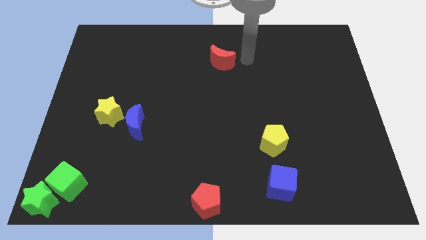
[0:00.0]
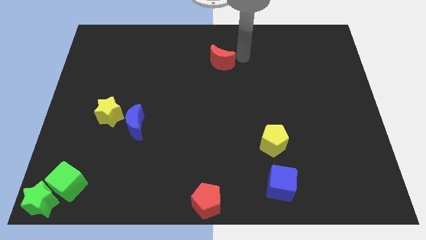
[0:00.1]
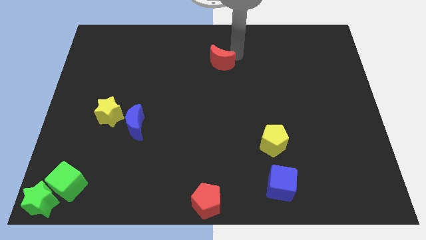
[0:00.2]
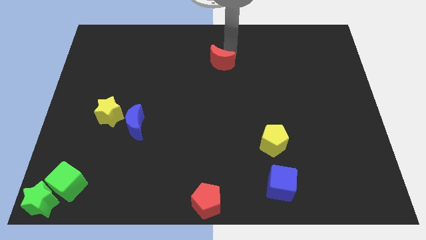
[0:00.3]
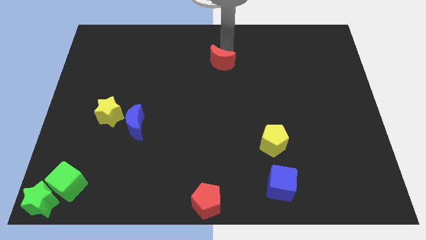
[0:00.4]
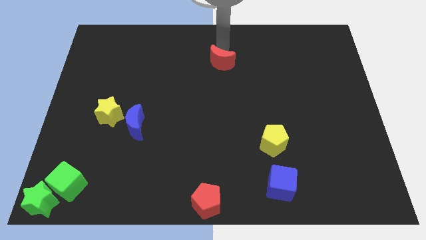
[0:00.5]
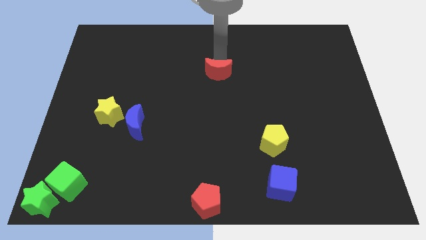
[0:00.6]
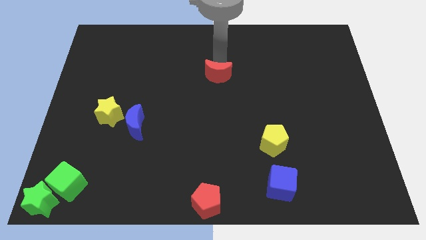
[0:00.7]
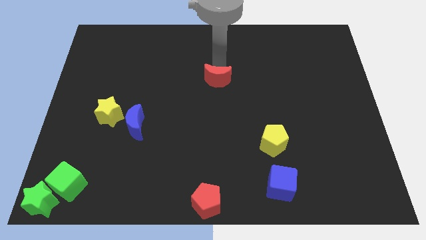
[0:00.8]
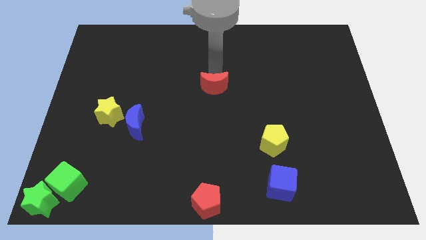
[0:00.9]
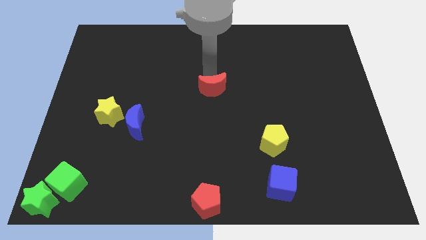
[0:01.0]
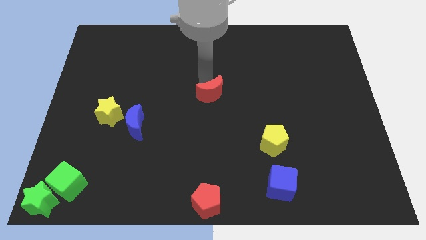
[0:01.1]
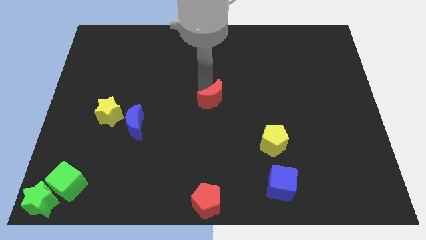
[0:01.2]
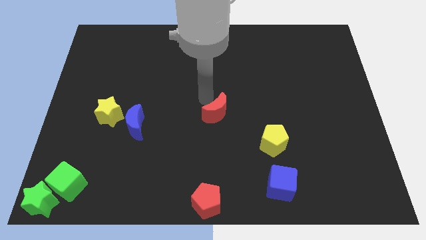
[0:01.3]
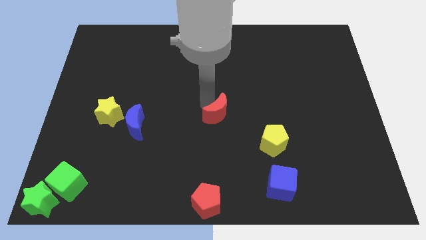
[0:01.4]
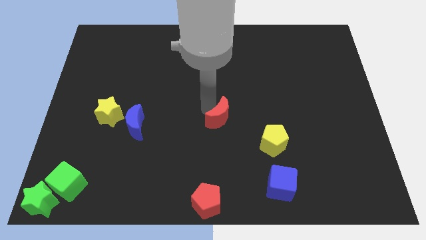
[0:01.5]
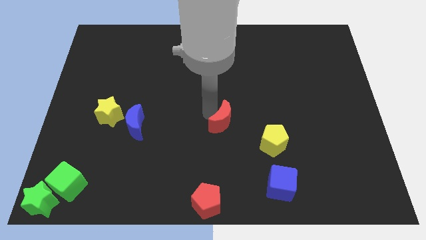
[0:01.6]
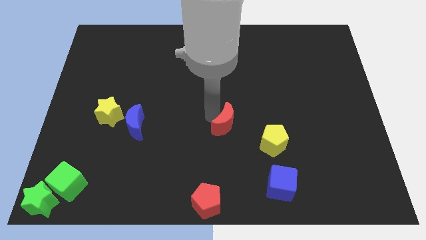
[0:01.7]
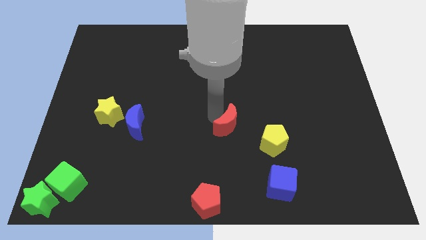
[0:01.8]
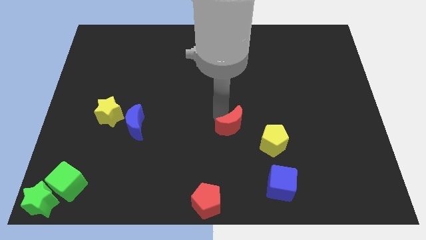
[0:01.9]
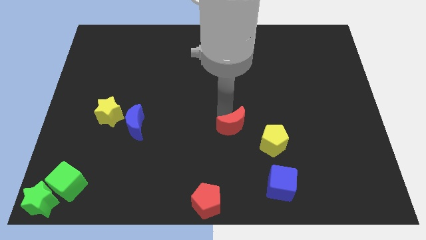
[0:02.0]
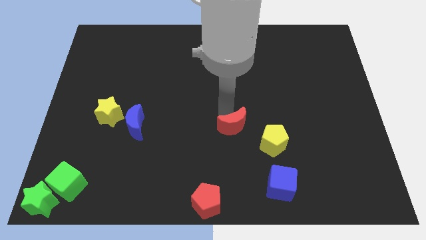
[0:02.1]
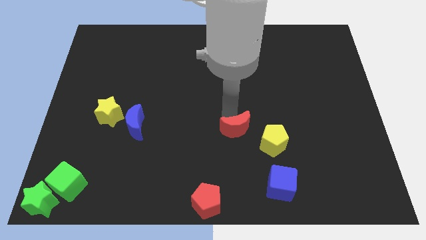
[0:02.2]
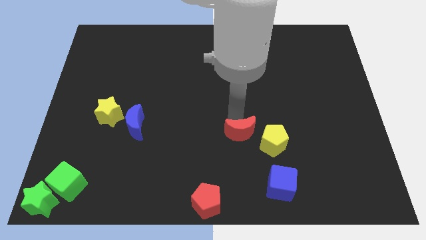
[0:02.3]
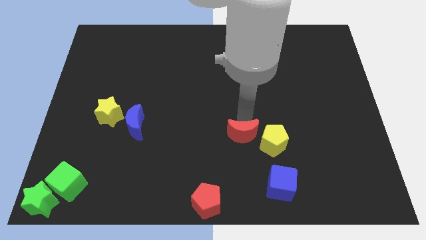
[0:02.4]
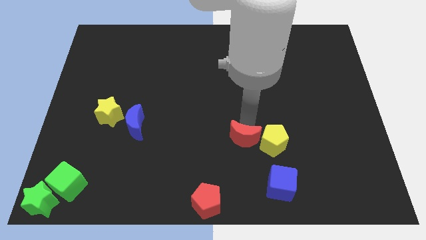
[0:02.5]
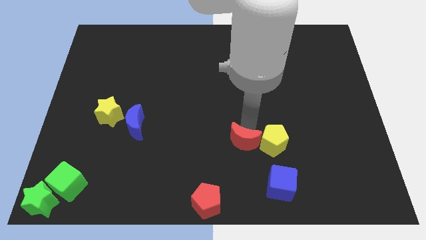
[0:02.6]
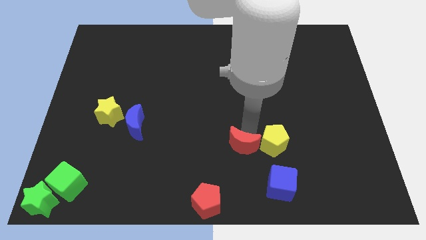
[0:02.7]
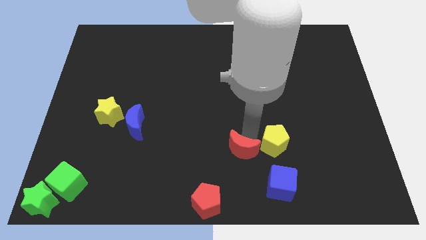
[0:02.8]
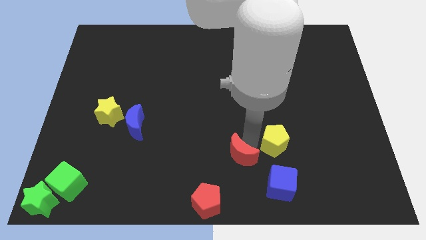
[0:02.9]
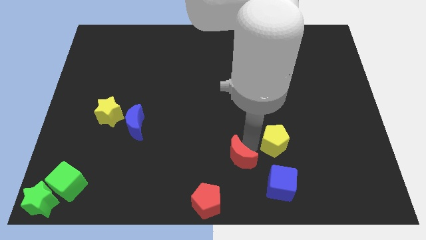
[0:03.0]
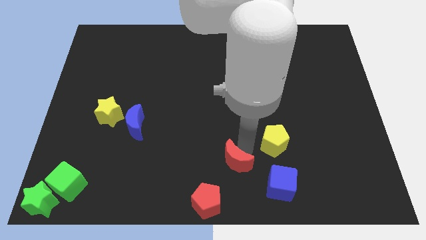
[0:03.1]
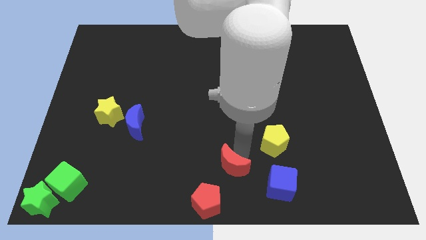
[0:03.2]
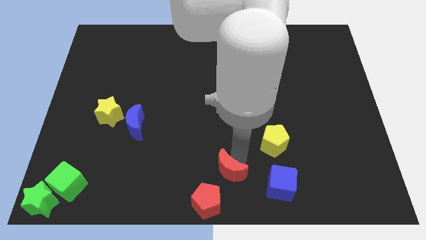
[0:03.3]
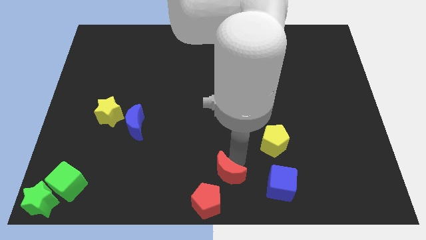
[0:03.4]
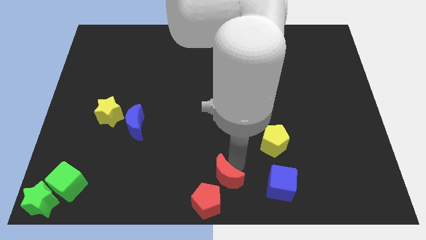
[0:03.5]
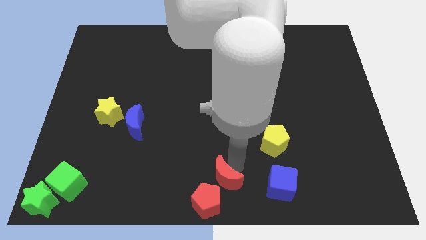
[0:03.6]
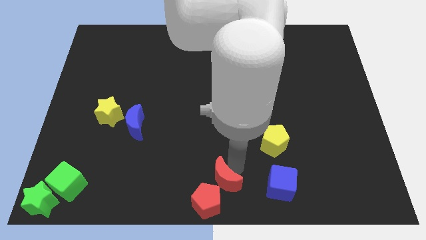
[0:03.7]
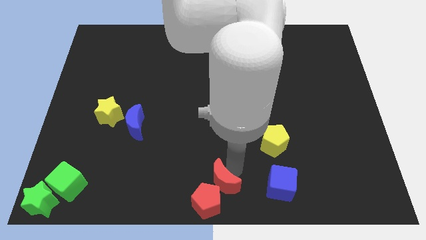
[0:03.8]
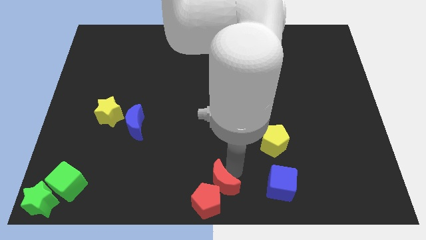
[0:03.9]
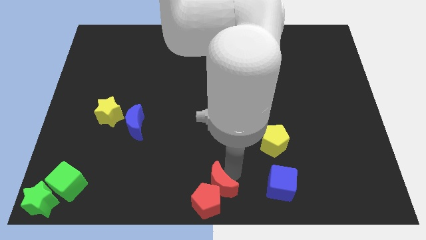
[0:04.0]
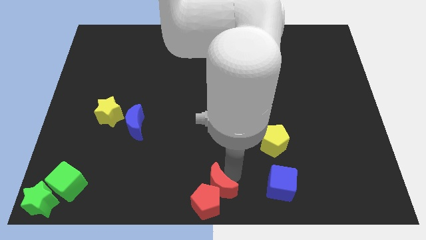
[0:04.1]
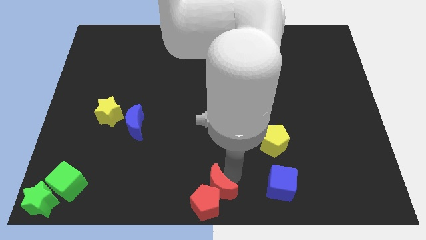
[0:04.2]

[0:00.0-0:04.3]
move the red crescent to the top right of the red pentagon

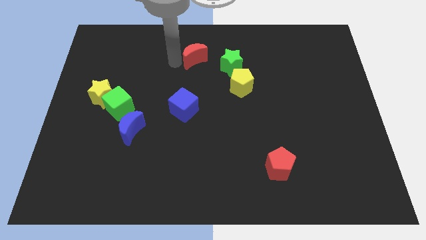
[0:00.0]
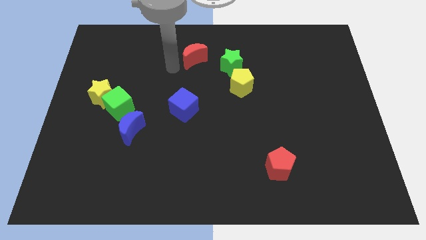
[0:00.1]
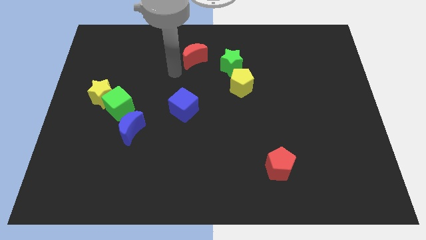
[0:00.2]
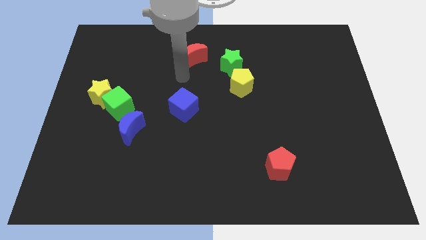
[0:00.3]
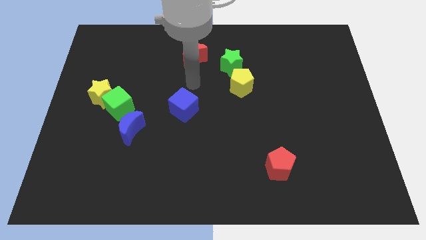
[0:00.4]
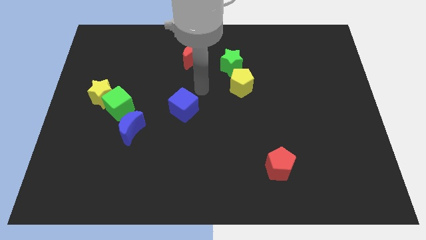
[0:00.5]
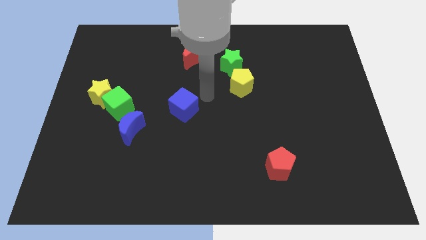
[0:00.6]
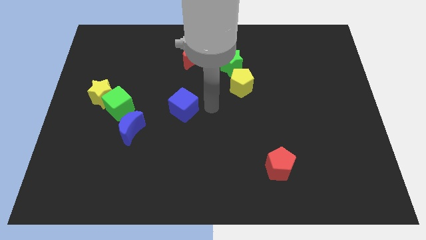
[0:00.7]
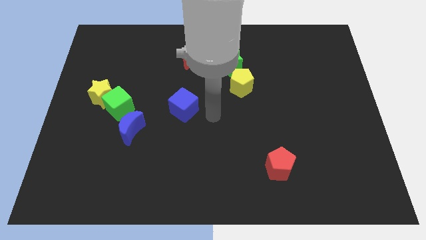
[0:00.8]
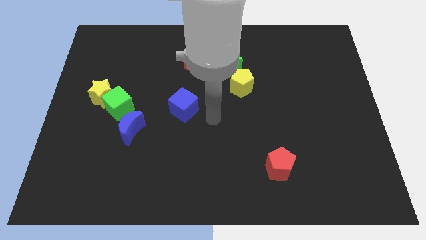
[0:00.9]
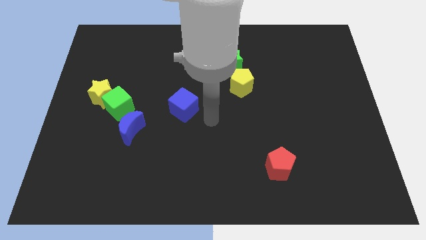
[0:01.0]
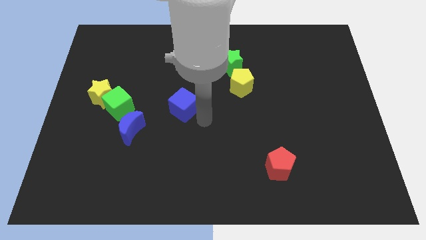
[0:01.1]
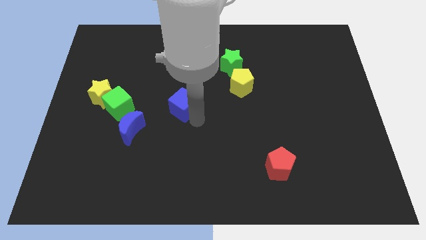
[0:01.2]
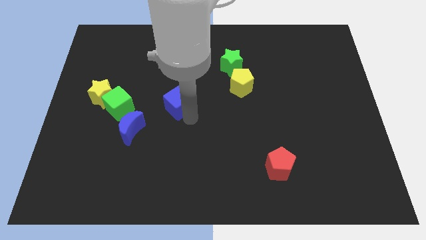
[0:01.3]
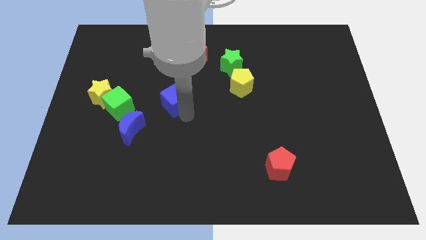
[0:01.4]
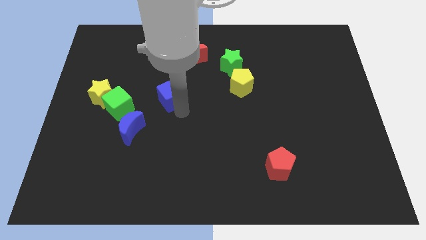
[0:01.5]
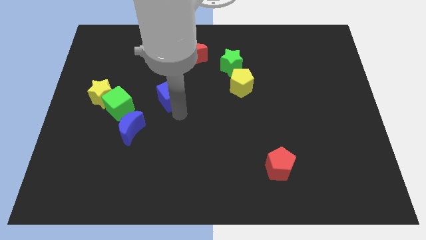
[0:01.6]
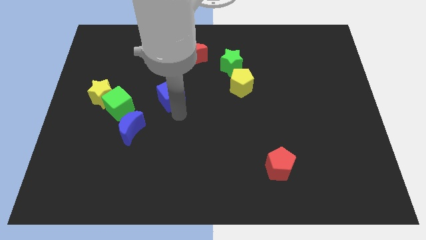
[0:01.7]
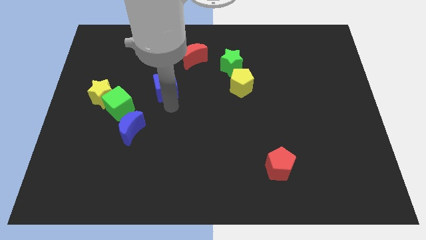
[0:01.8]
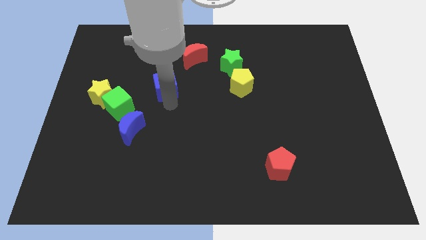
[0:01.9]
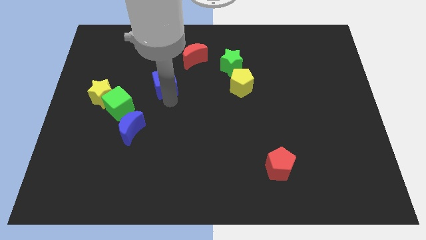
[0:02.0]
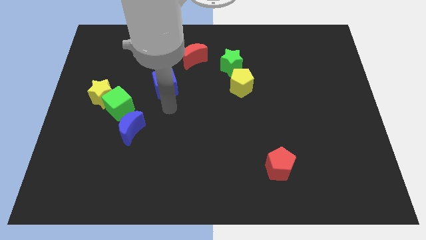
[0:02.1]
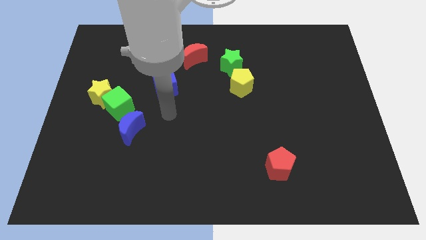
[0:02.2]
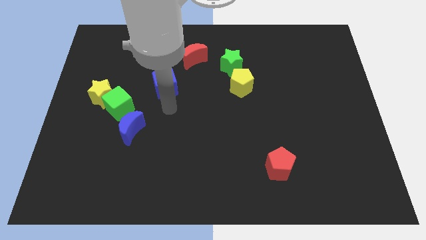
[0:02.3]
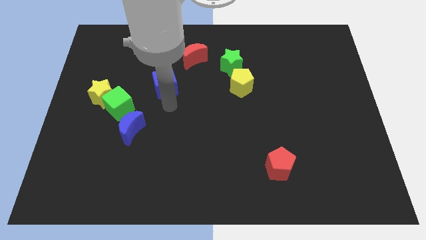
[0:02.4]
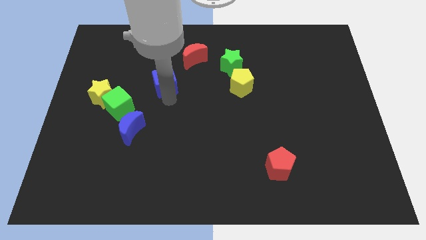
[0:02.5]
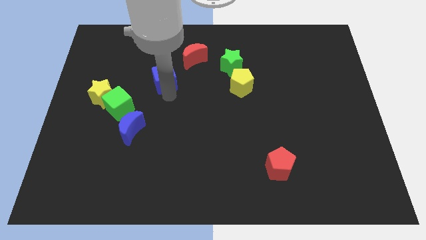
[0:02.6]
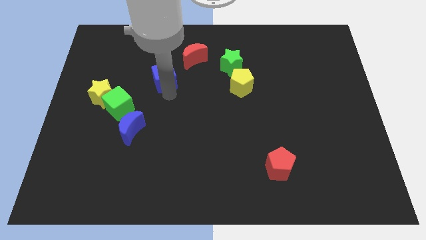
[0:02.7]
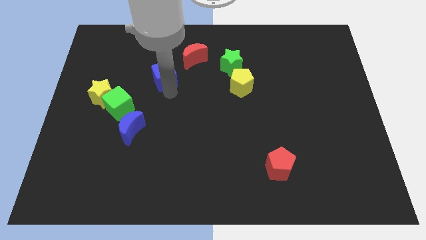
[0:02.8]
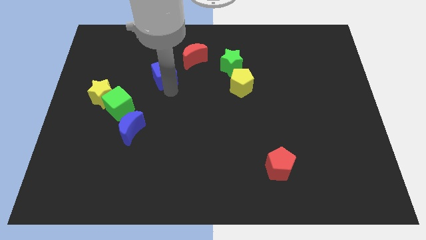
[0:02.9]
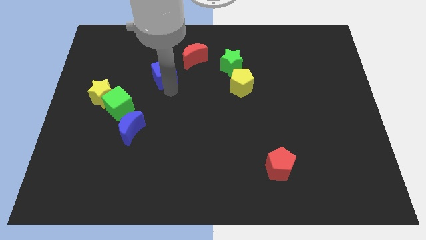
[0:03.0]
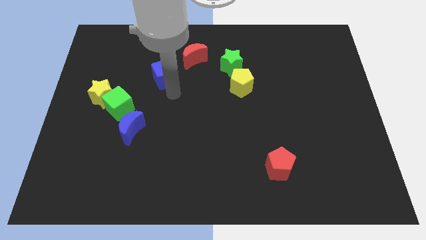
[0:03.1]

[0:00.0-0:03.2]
move the blue cube towards the left side of the red moon

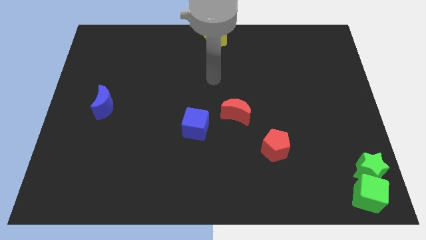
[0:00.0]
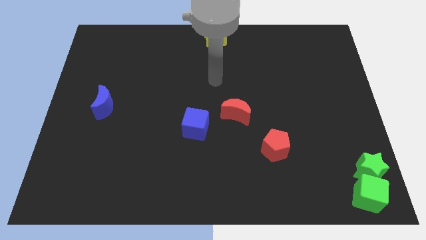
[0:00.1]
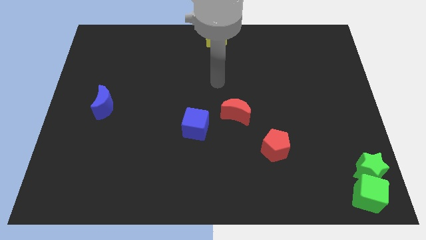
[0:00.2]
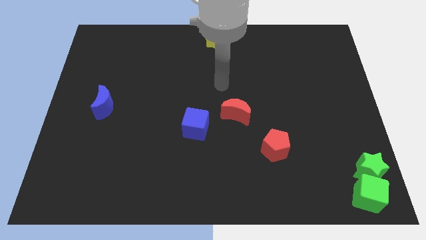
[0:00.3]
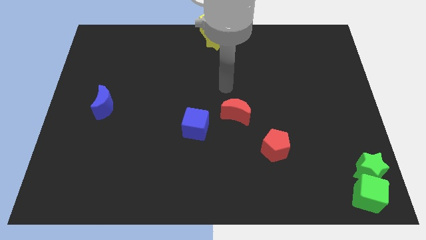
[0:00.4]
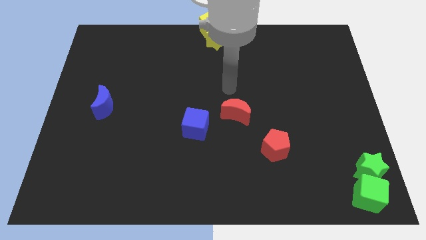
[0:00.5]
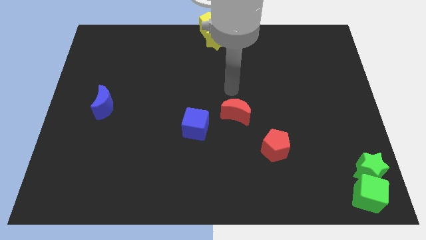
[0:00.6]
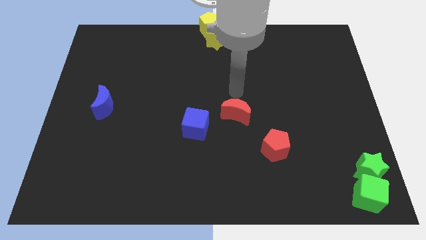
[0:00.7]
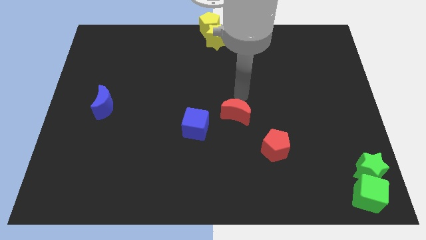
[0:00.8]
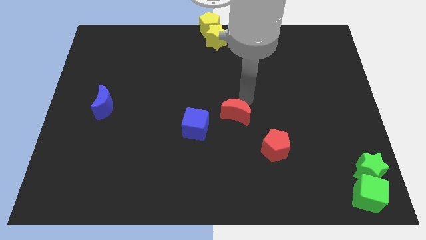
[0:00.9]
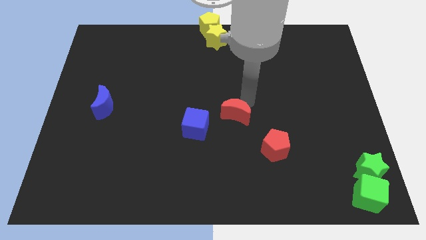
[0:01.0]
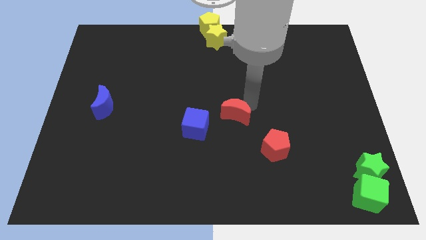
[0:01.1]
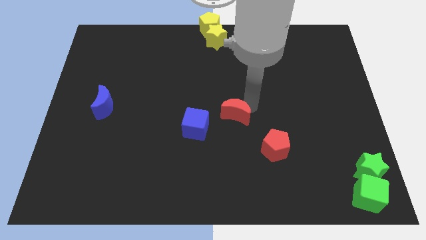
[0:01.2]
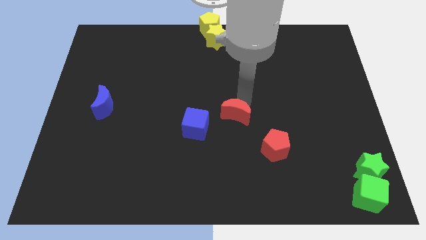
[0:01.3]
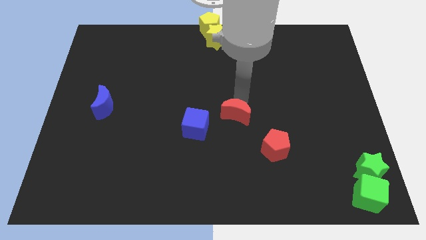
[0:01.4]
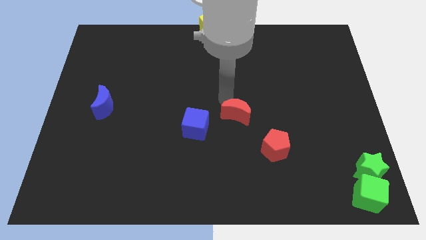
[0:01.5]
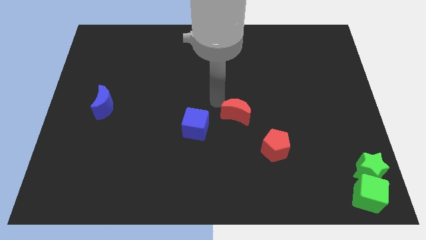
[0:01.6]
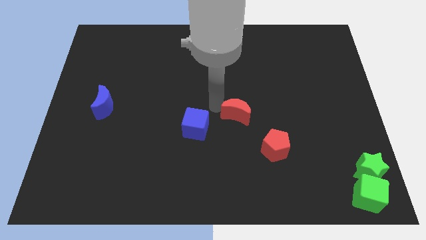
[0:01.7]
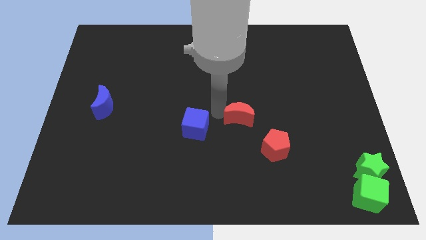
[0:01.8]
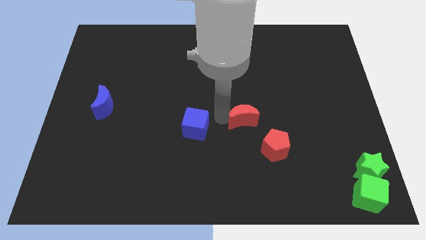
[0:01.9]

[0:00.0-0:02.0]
move arm left beside the red moon
